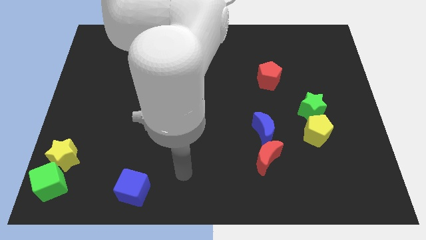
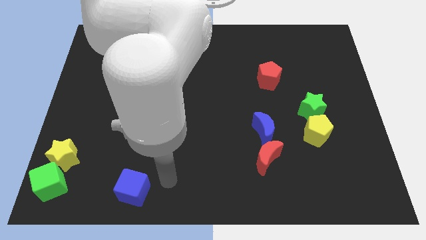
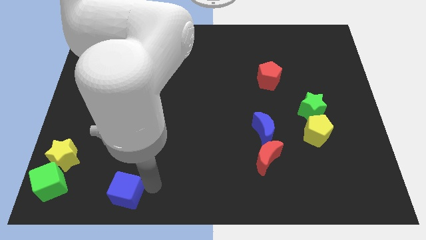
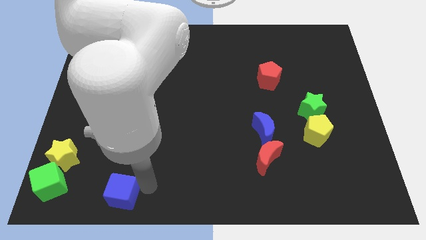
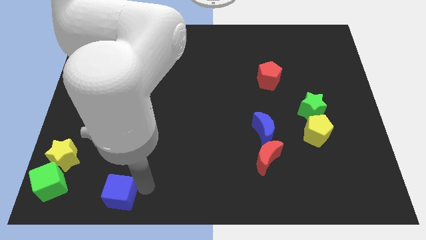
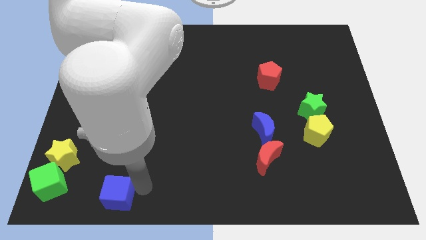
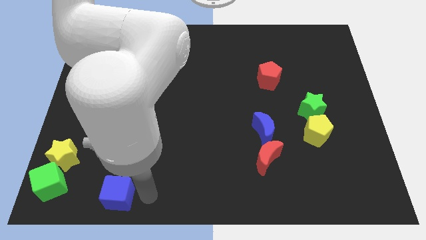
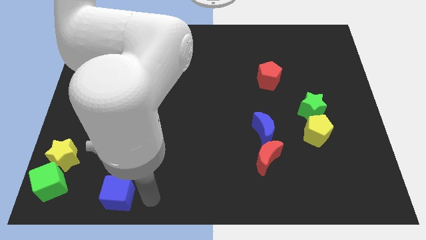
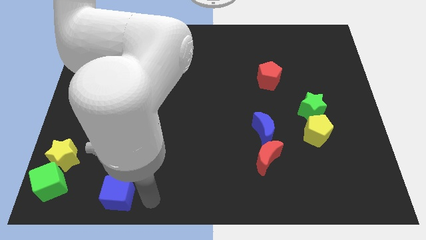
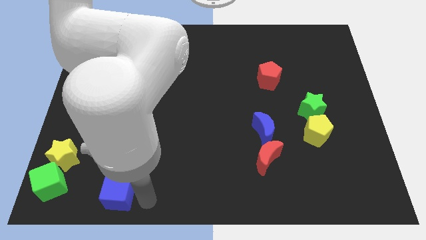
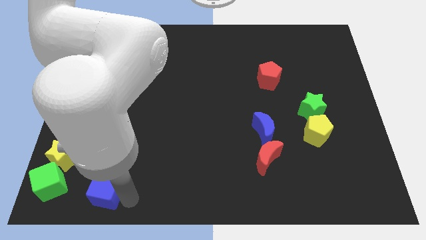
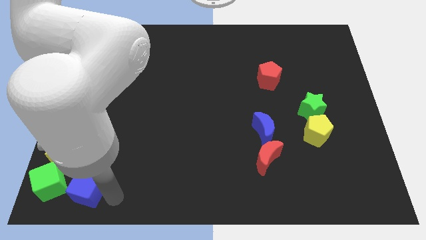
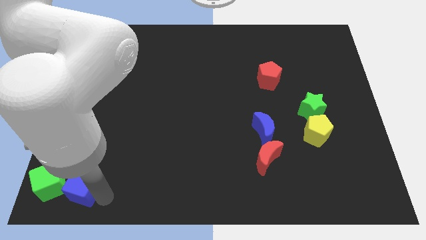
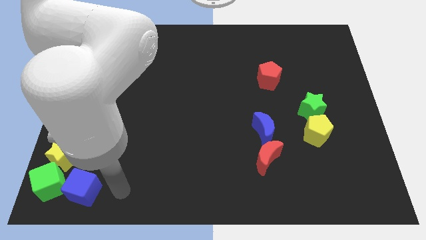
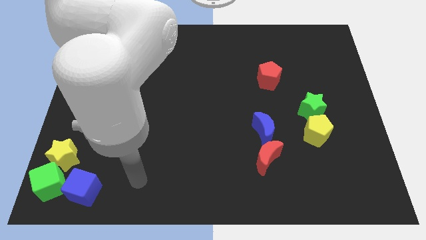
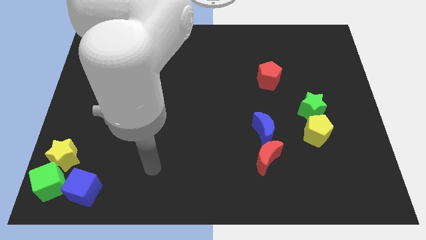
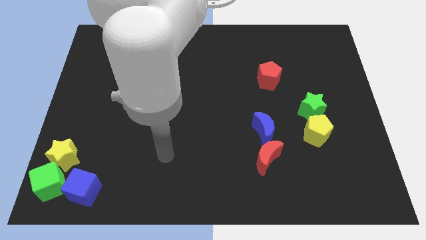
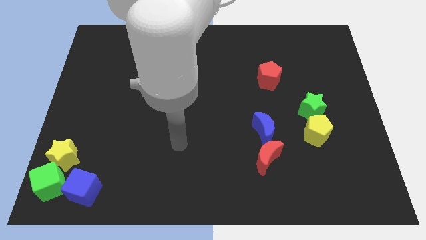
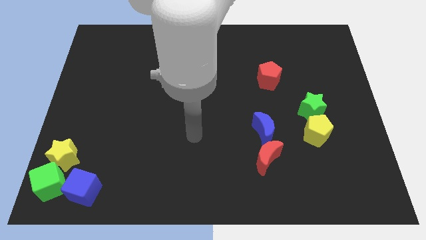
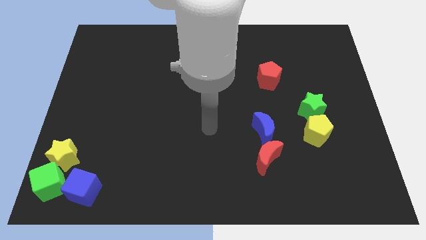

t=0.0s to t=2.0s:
push blue cube into the green cube

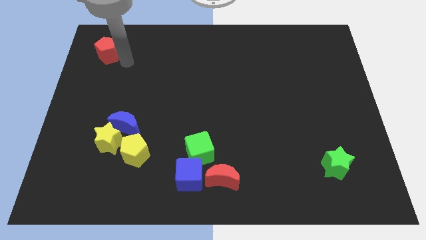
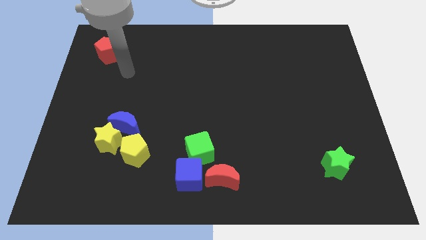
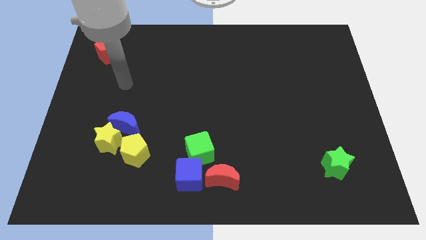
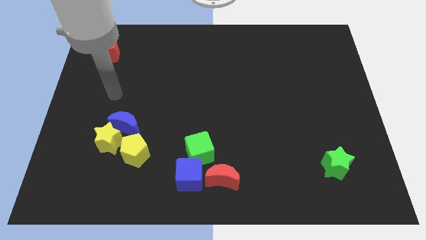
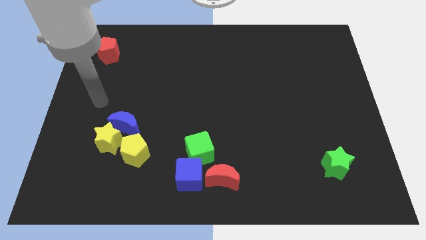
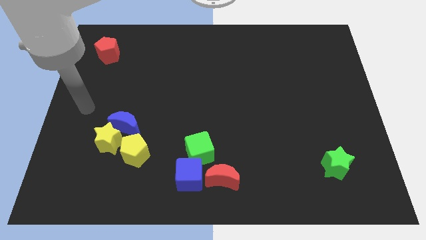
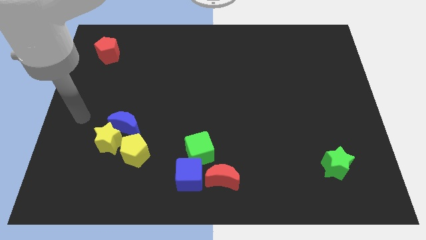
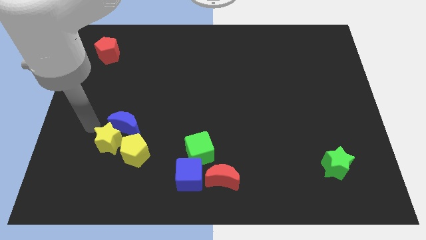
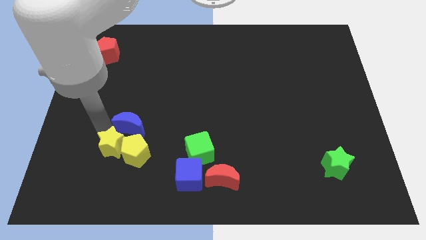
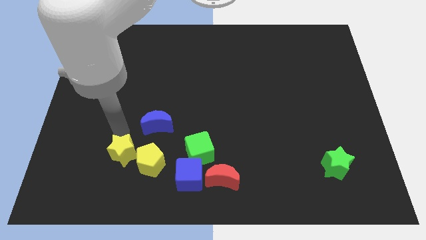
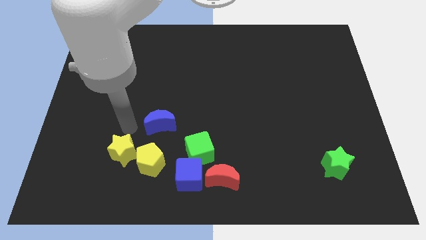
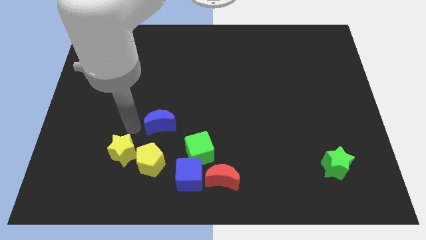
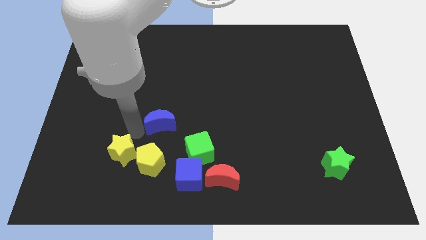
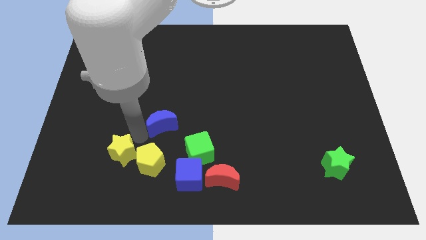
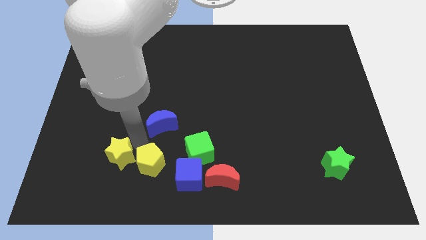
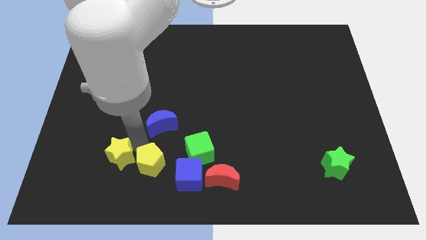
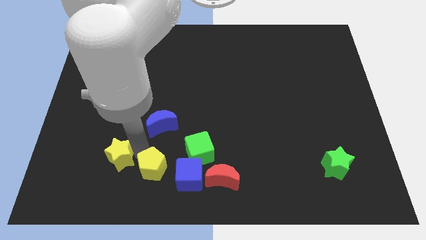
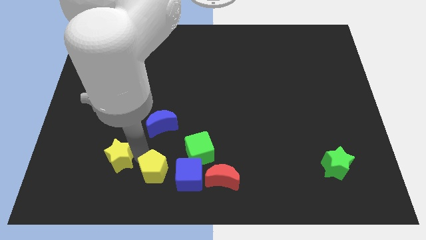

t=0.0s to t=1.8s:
separate the yellow star and the yellow penatgon

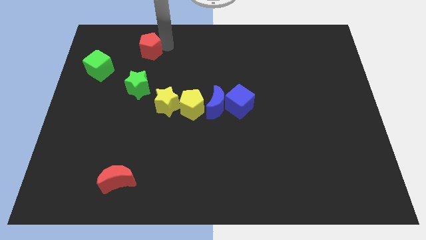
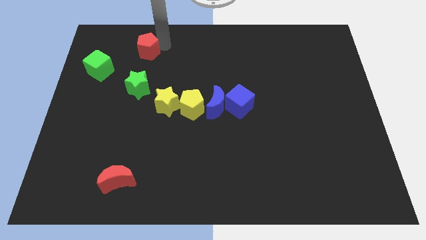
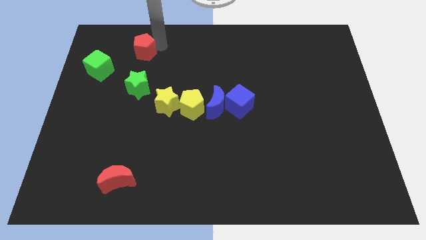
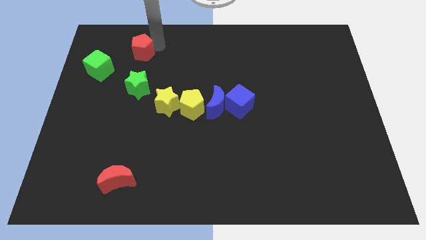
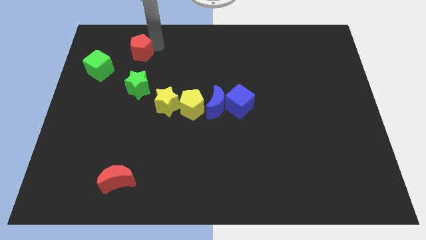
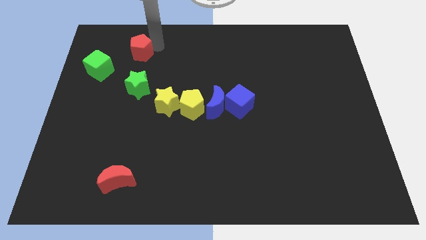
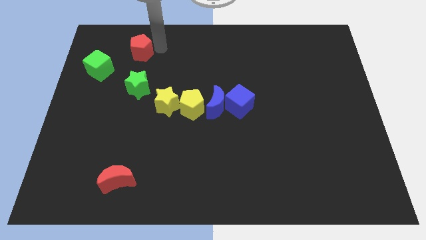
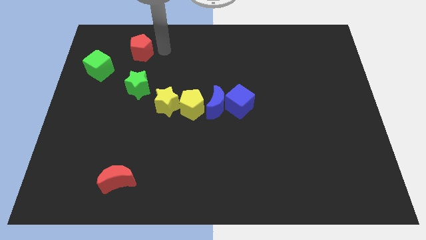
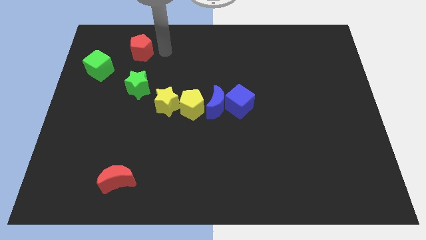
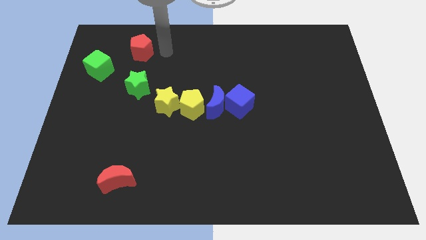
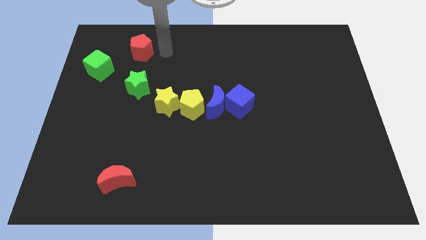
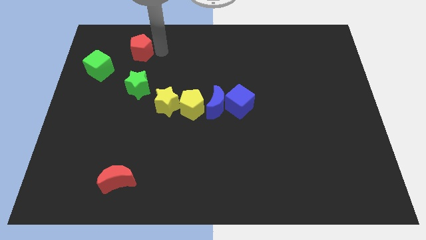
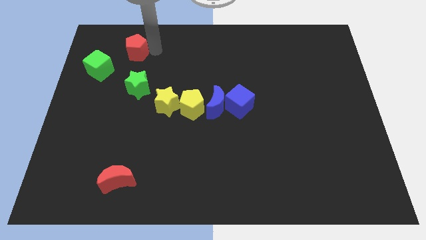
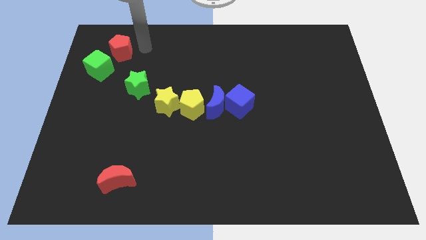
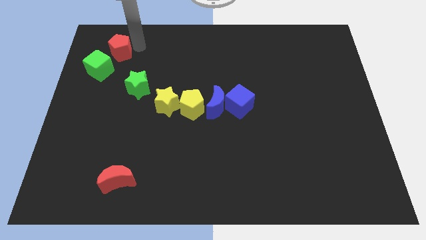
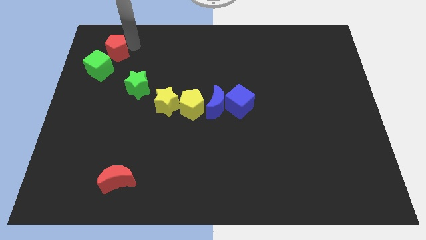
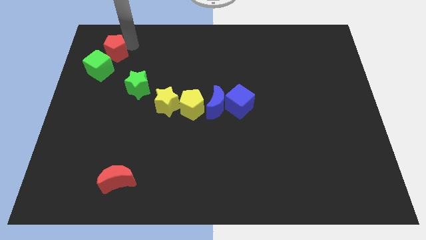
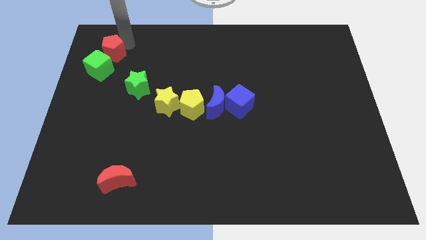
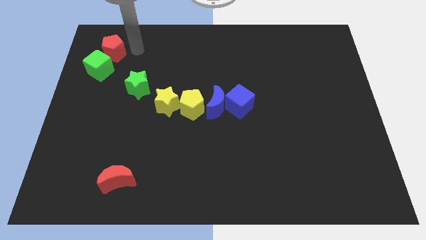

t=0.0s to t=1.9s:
push the red pentagon to the top of green cube

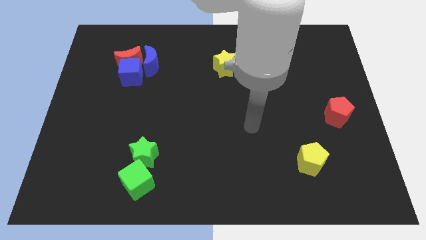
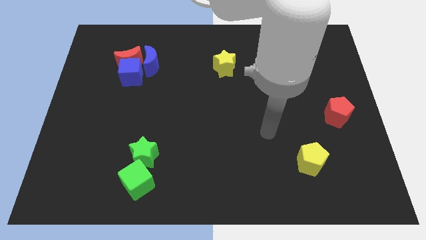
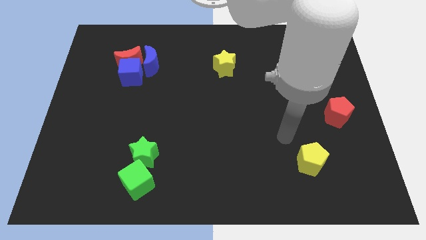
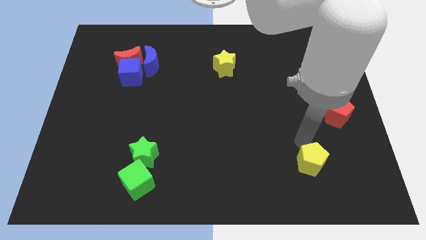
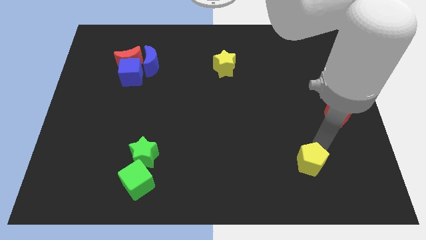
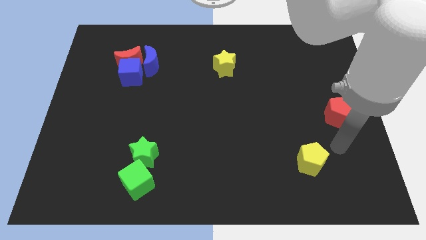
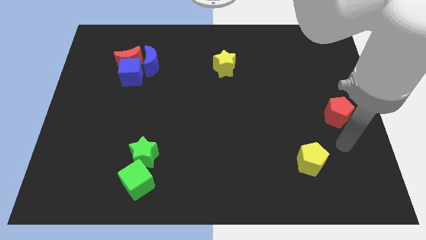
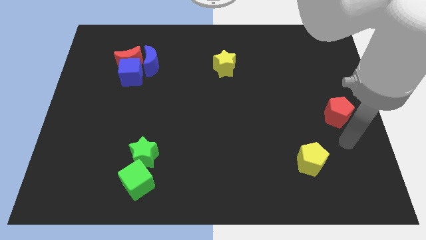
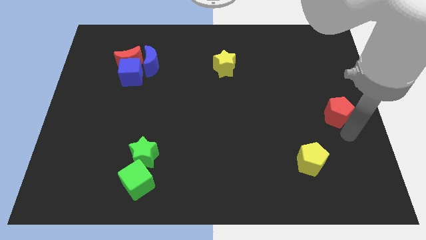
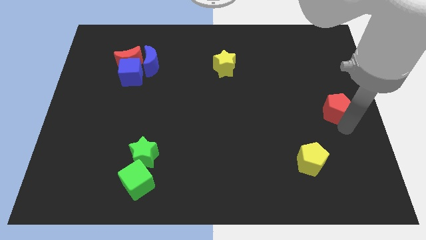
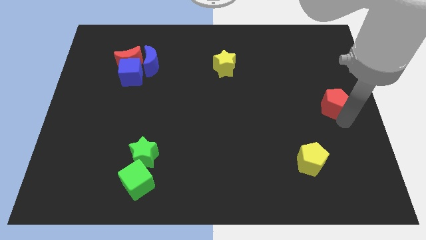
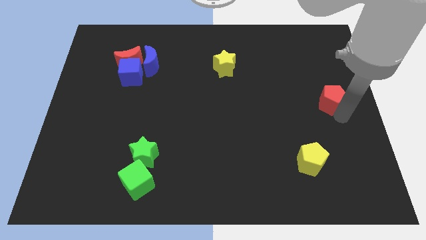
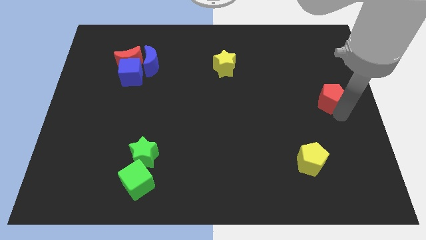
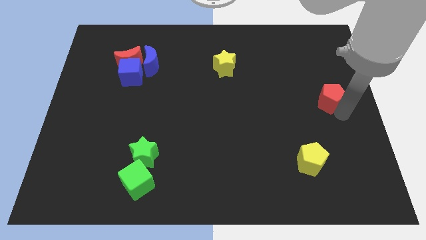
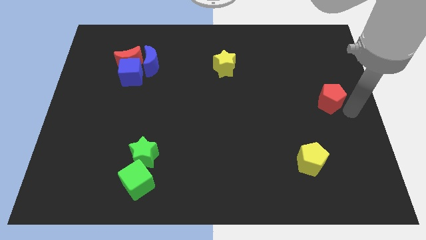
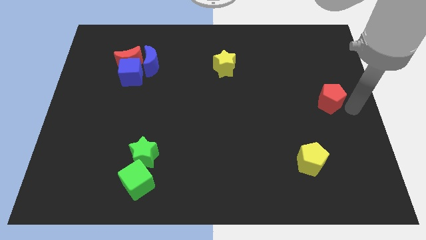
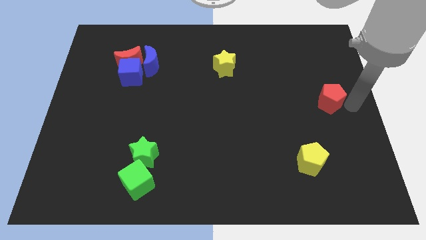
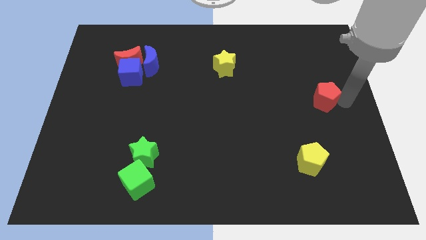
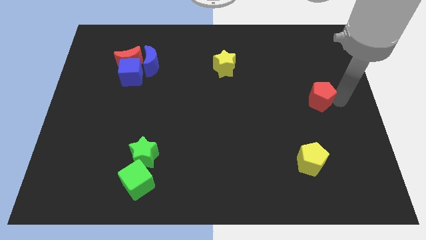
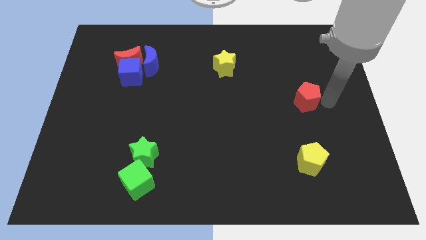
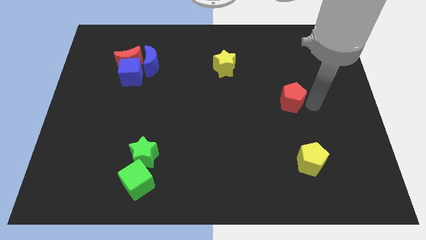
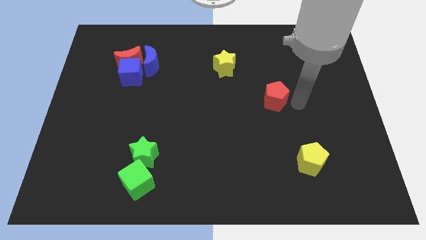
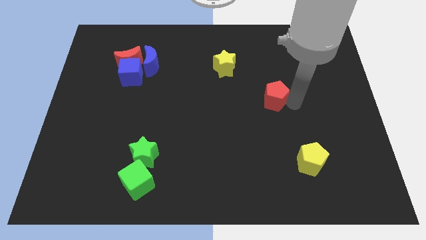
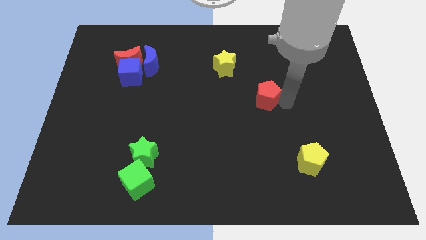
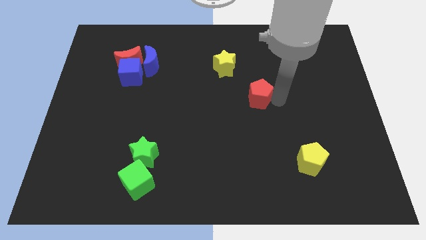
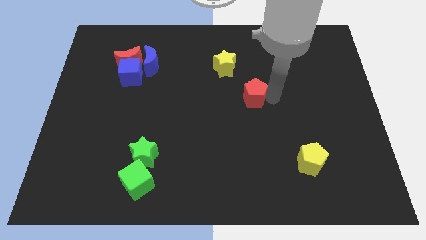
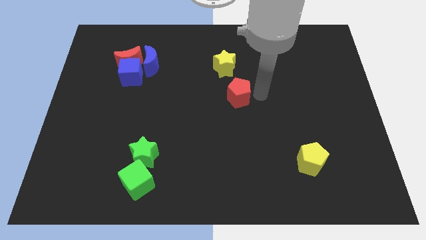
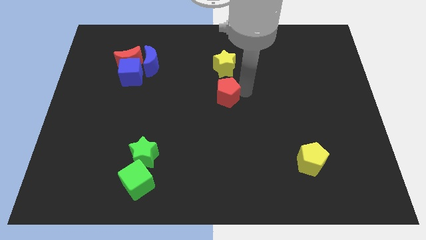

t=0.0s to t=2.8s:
place the red pentagon in between the yellow pentagon and yellow star

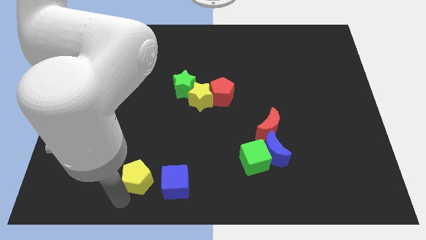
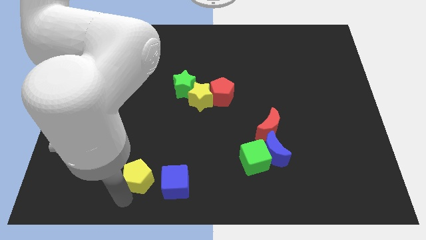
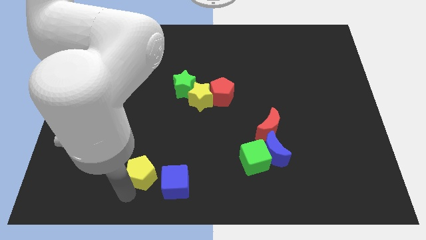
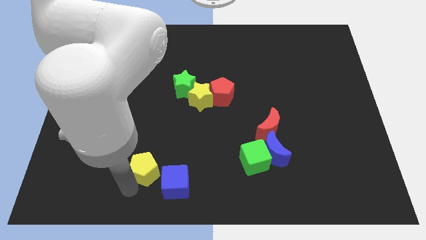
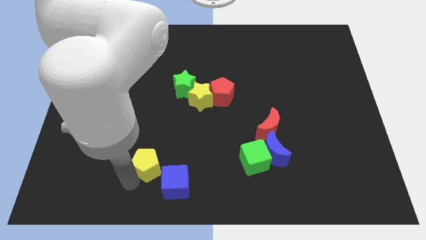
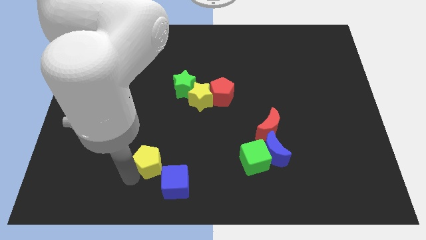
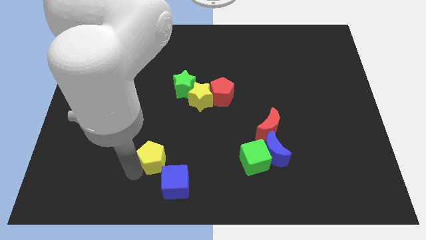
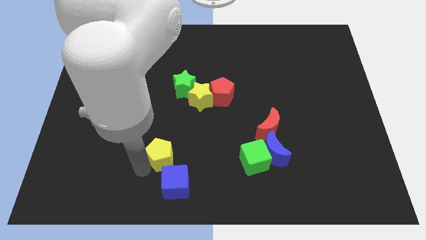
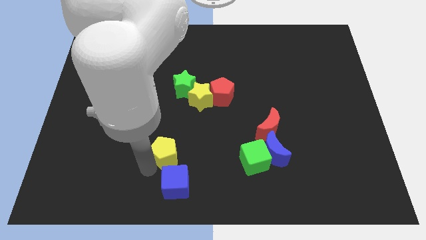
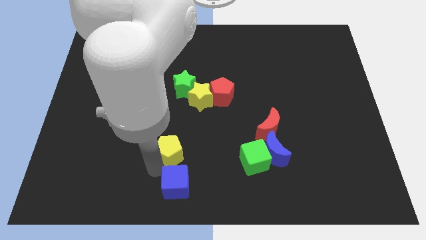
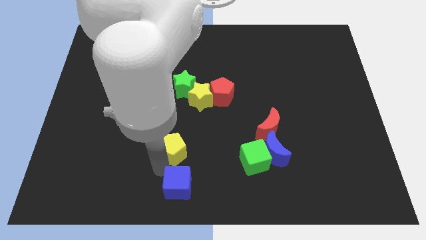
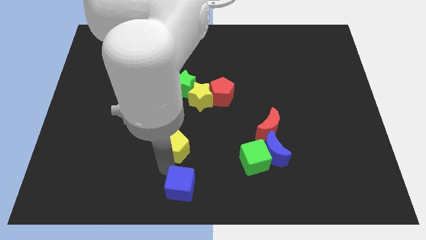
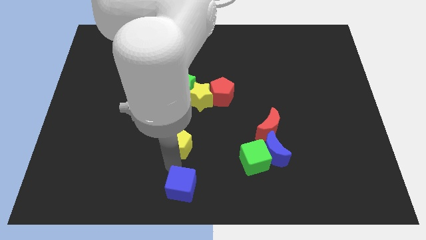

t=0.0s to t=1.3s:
place the yellow pentagon above tha blue cube
